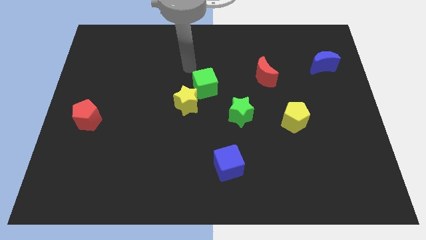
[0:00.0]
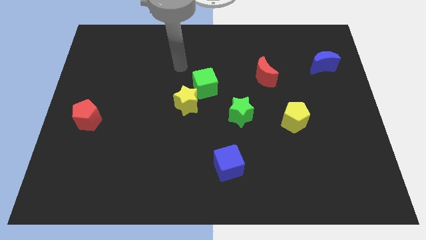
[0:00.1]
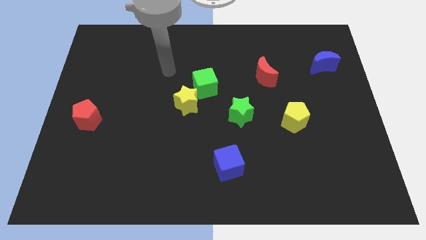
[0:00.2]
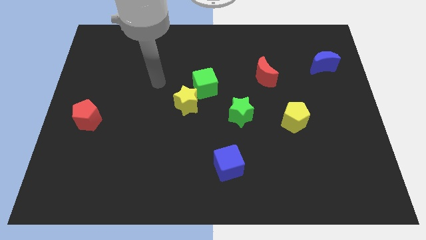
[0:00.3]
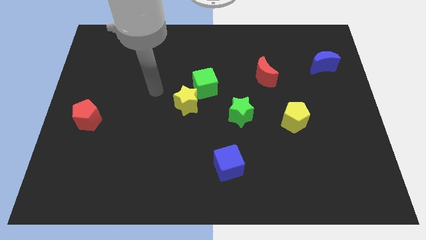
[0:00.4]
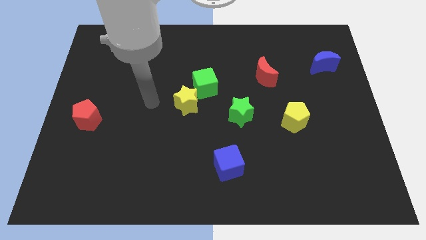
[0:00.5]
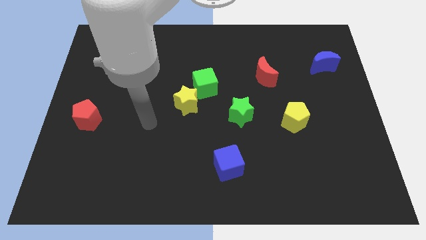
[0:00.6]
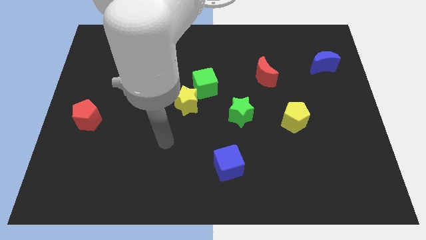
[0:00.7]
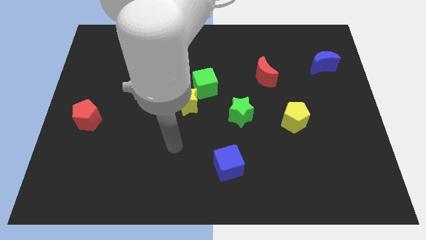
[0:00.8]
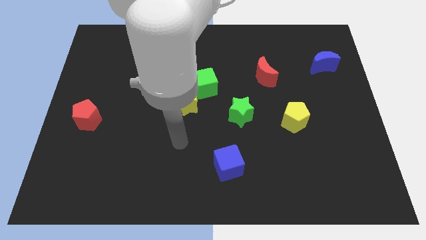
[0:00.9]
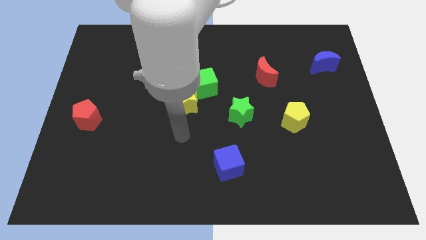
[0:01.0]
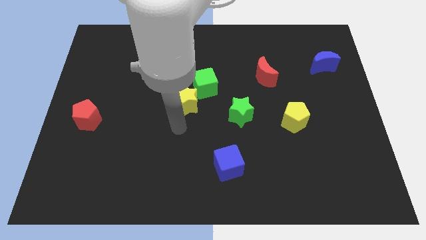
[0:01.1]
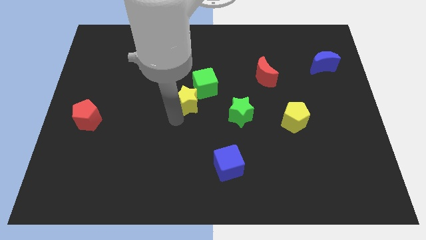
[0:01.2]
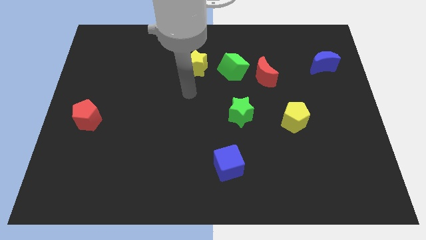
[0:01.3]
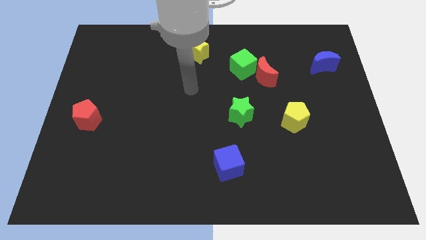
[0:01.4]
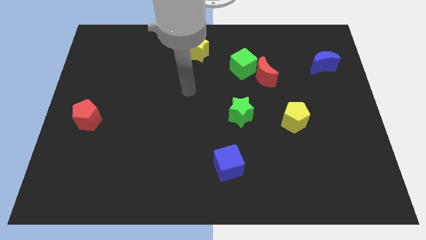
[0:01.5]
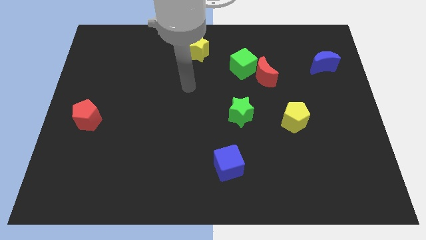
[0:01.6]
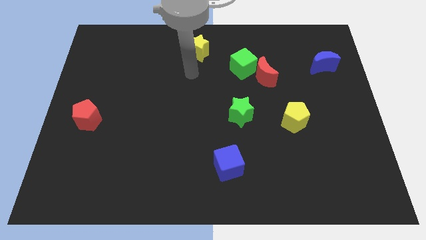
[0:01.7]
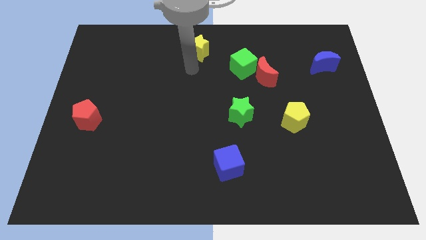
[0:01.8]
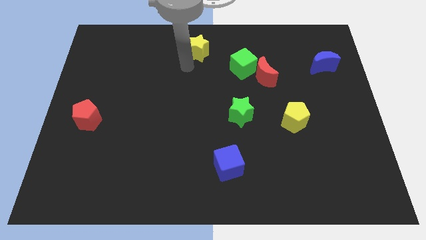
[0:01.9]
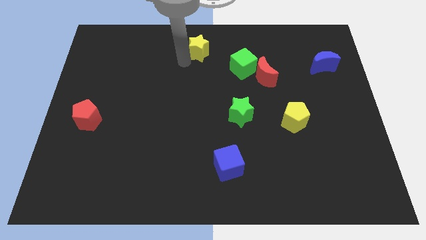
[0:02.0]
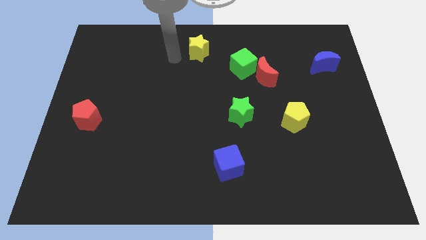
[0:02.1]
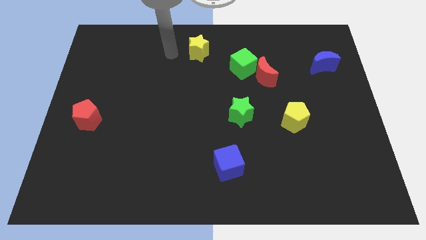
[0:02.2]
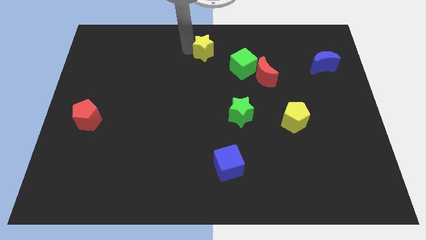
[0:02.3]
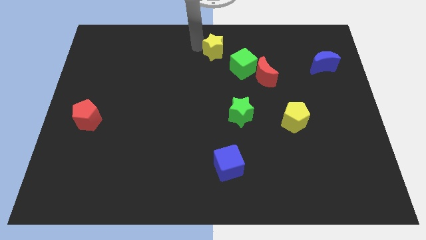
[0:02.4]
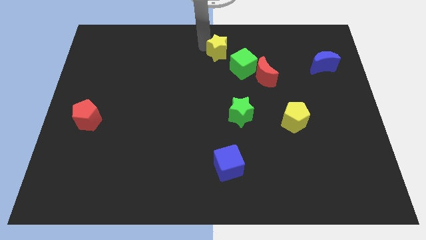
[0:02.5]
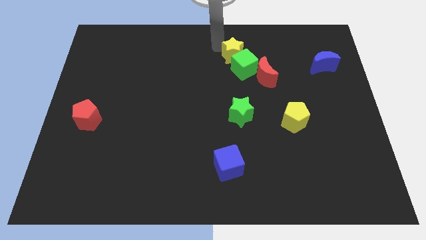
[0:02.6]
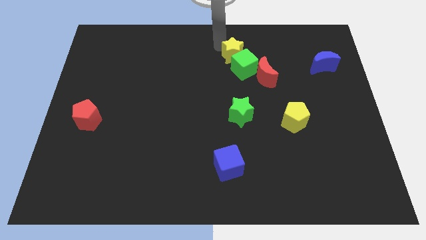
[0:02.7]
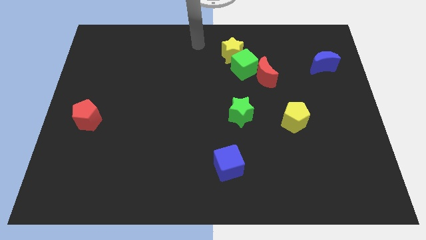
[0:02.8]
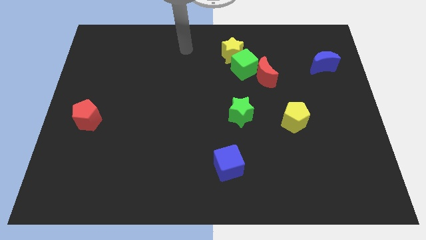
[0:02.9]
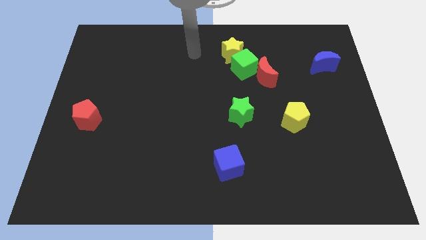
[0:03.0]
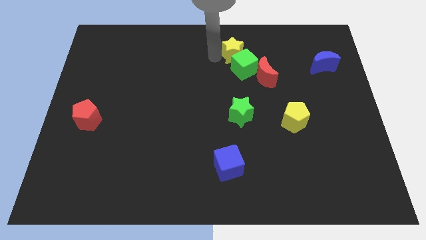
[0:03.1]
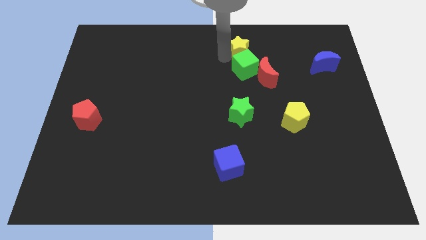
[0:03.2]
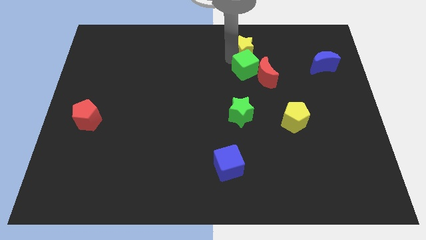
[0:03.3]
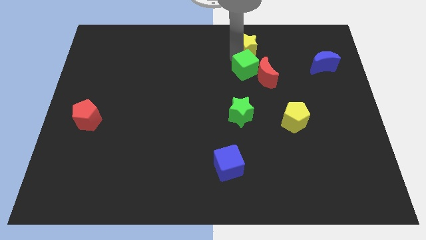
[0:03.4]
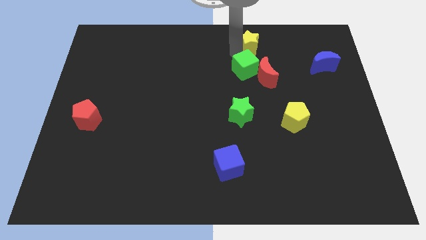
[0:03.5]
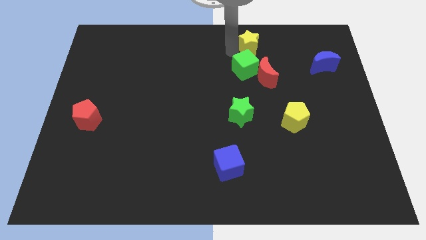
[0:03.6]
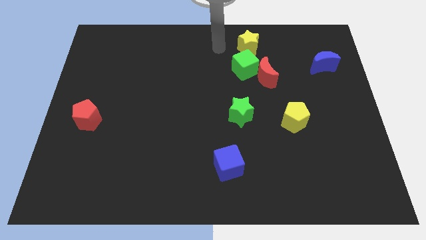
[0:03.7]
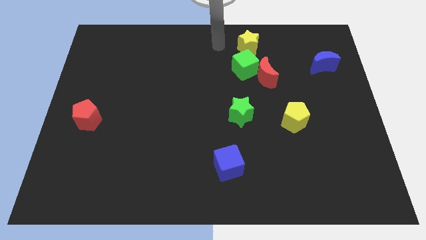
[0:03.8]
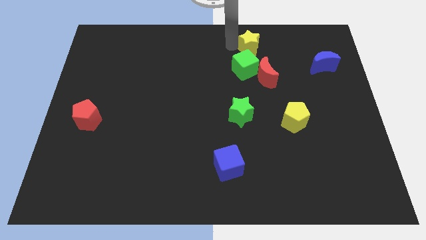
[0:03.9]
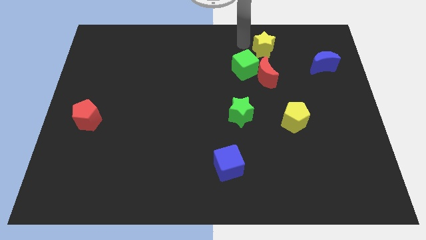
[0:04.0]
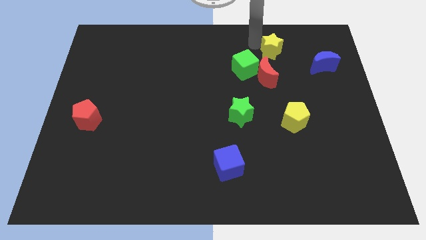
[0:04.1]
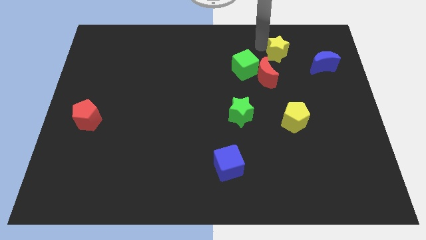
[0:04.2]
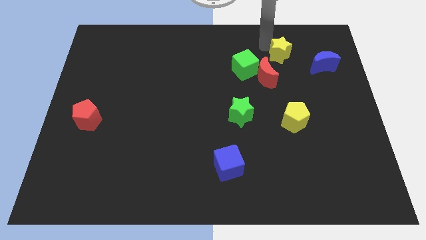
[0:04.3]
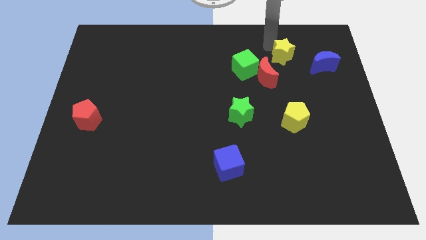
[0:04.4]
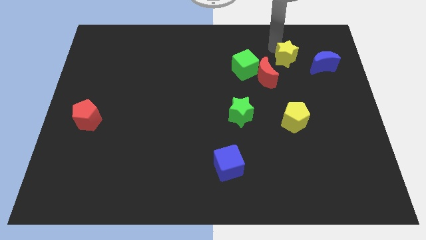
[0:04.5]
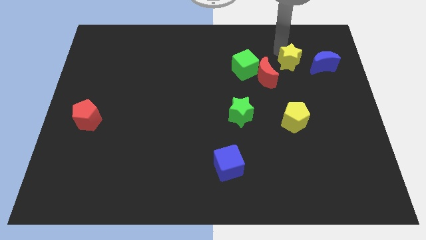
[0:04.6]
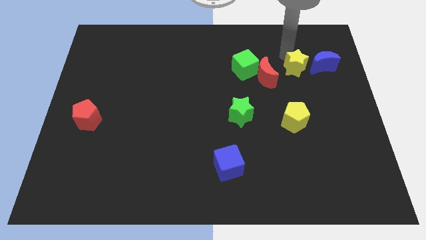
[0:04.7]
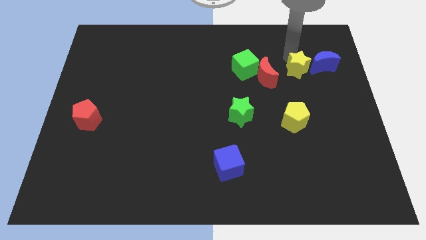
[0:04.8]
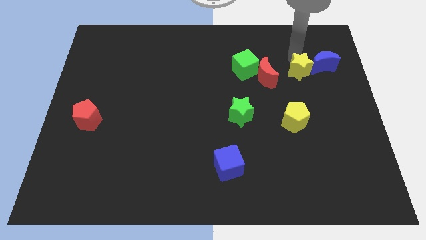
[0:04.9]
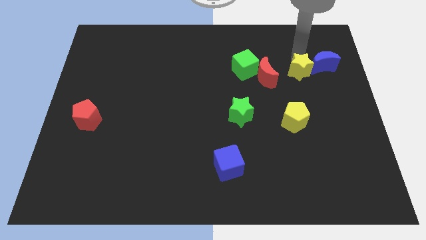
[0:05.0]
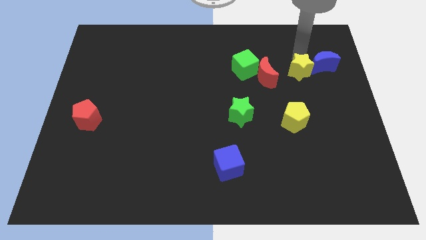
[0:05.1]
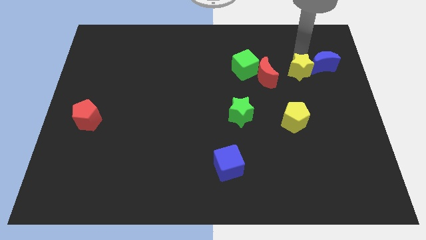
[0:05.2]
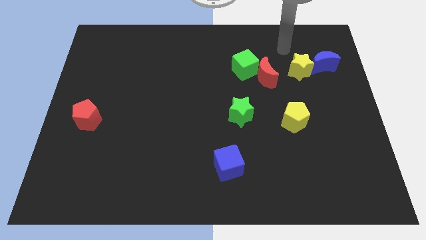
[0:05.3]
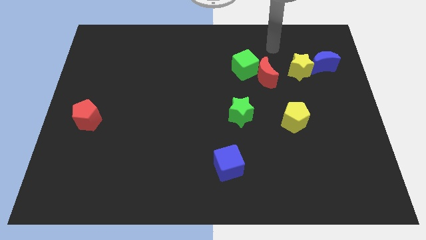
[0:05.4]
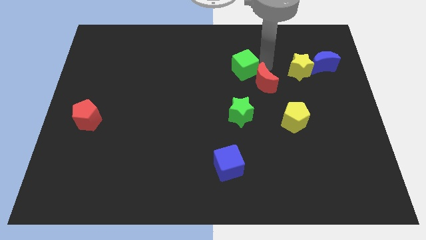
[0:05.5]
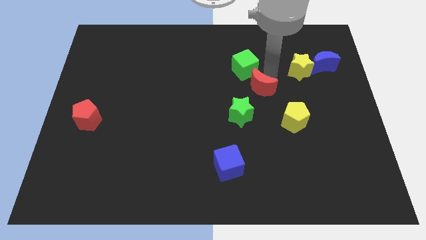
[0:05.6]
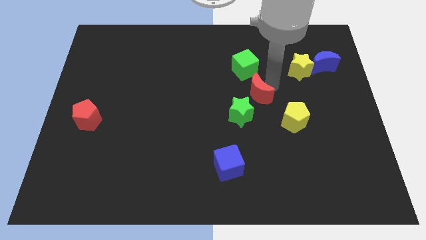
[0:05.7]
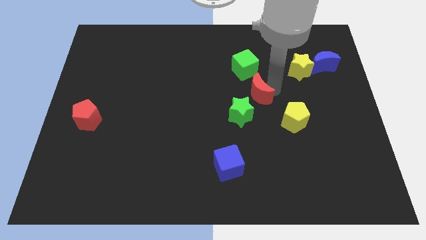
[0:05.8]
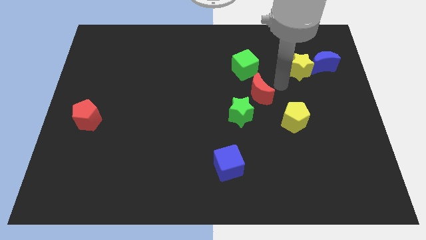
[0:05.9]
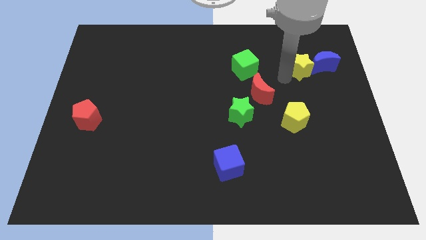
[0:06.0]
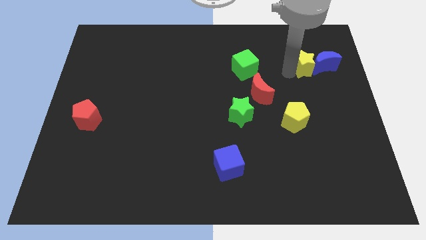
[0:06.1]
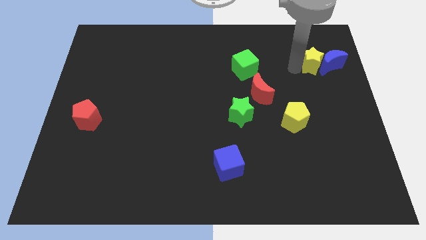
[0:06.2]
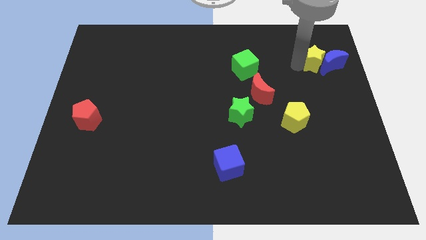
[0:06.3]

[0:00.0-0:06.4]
move the yellow star close to the blue moon

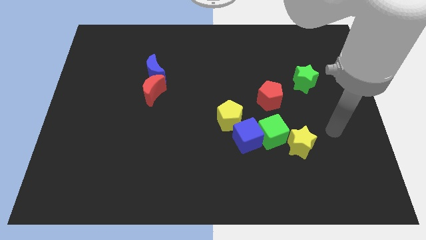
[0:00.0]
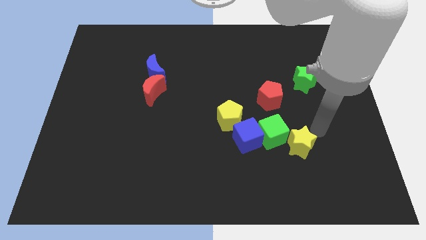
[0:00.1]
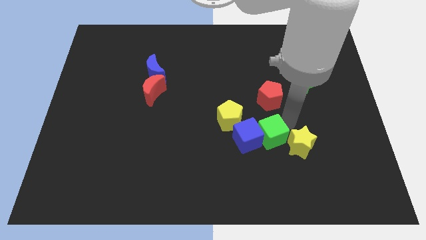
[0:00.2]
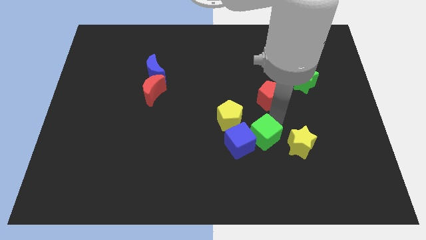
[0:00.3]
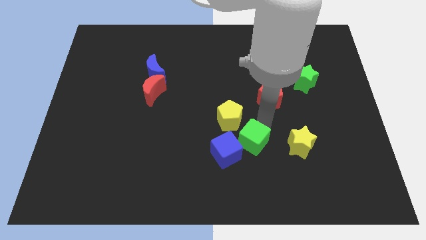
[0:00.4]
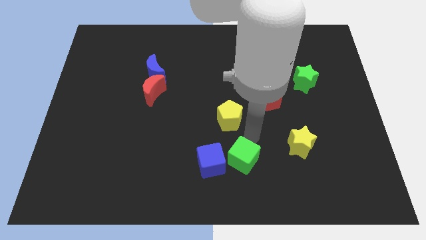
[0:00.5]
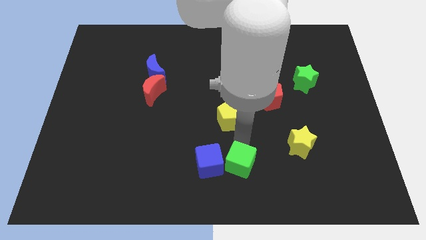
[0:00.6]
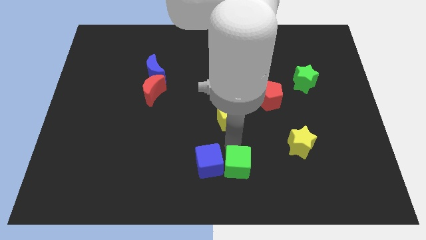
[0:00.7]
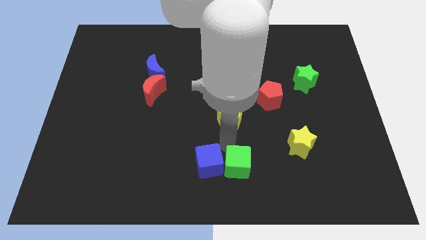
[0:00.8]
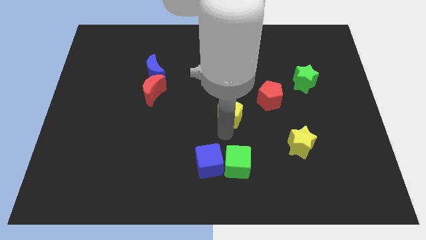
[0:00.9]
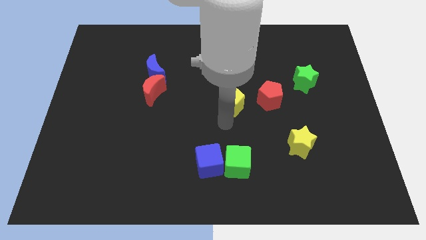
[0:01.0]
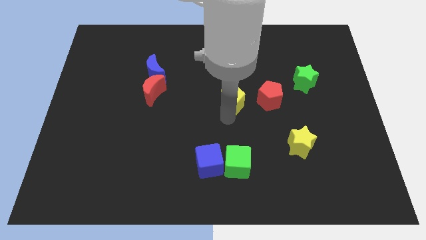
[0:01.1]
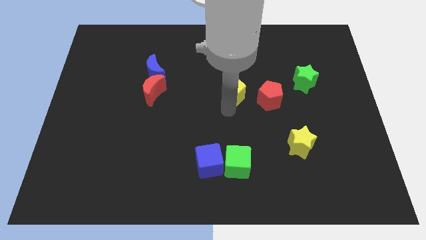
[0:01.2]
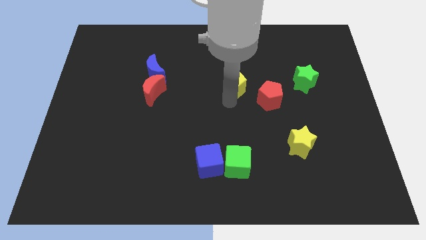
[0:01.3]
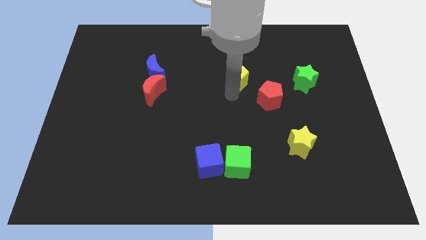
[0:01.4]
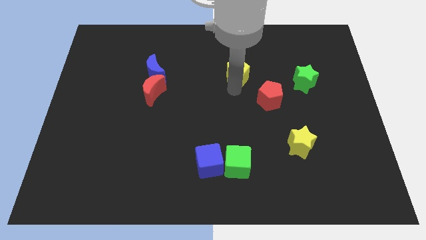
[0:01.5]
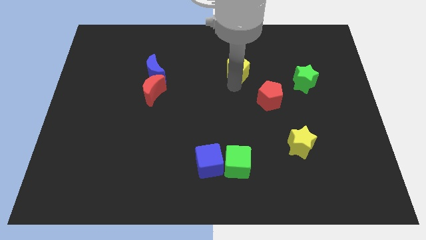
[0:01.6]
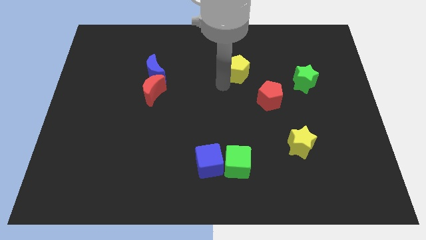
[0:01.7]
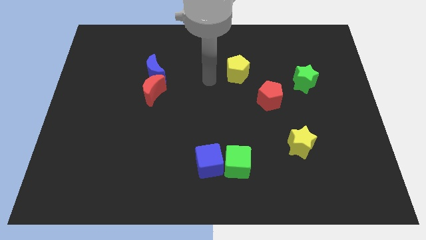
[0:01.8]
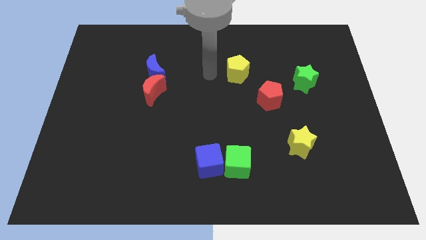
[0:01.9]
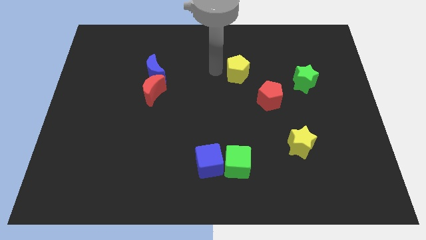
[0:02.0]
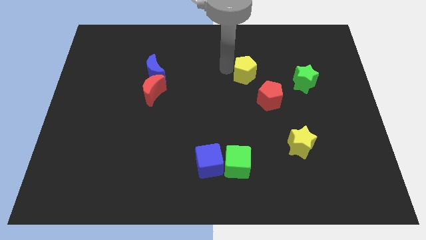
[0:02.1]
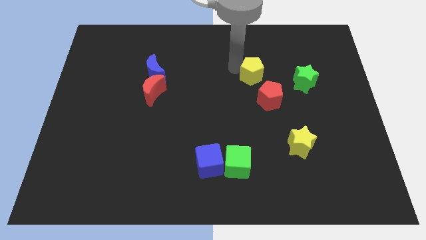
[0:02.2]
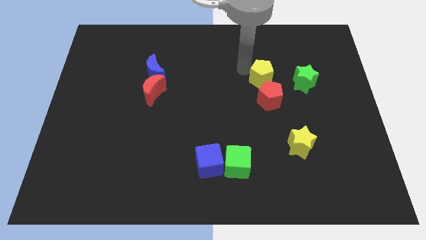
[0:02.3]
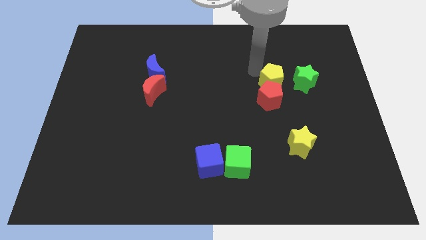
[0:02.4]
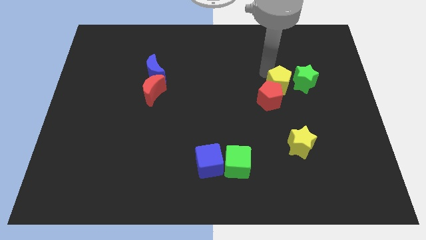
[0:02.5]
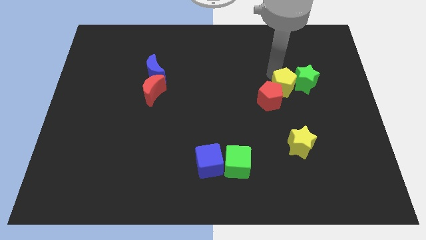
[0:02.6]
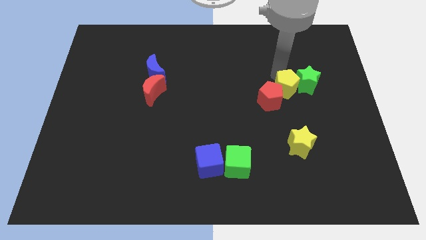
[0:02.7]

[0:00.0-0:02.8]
put the yellow pentagon next to the green star
